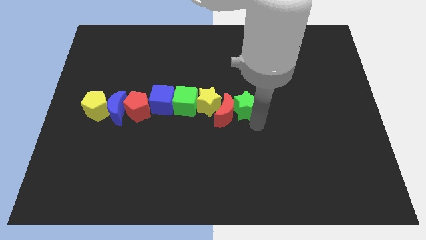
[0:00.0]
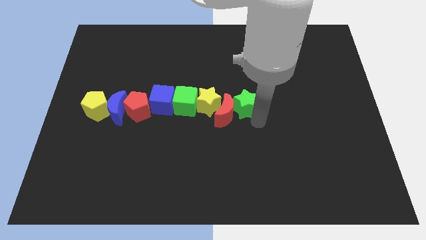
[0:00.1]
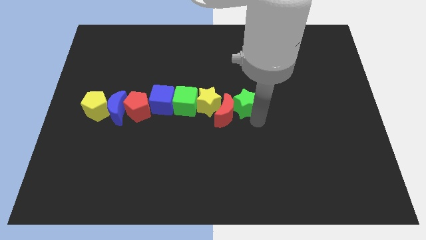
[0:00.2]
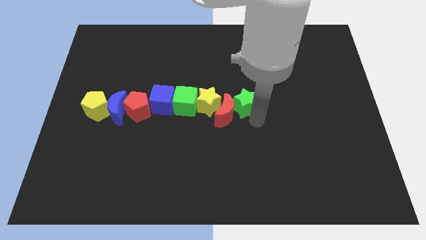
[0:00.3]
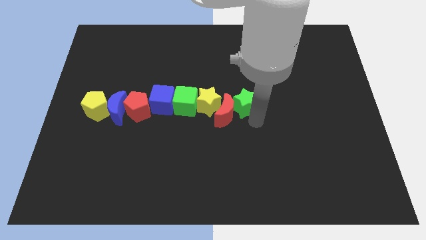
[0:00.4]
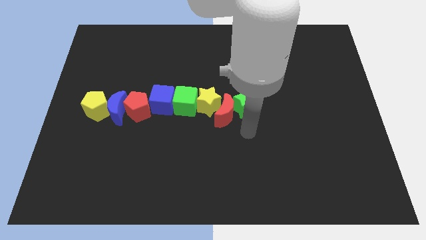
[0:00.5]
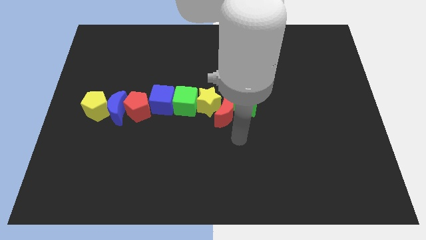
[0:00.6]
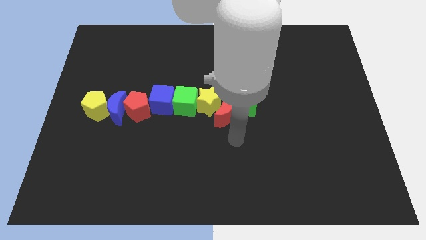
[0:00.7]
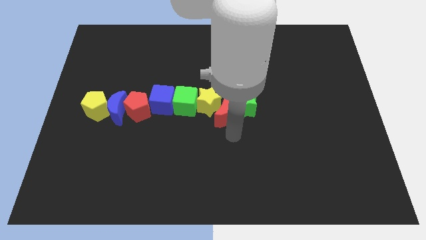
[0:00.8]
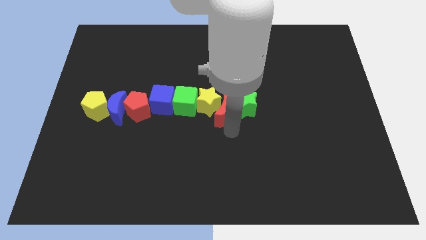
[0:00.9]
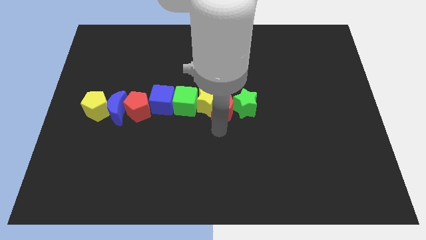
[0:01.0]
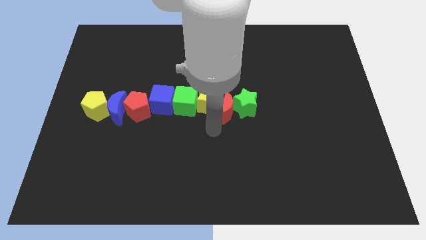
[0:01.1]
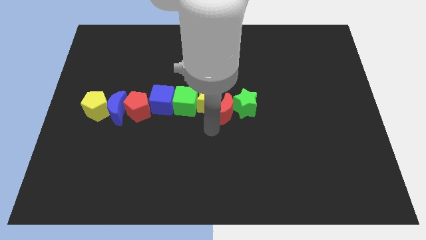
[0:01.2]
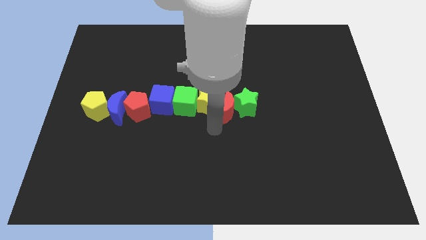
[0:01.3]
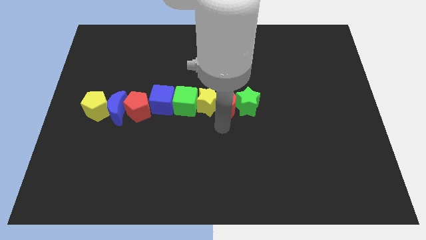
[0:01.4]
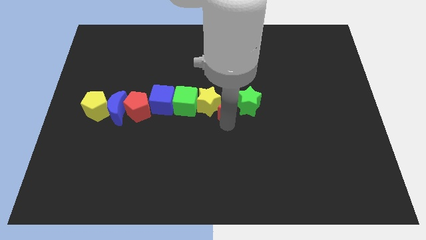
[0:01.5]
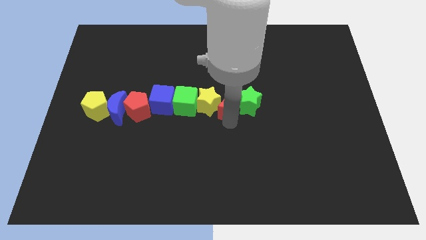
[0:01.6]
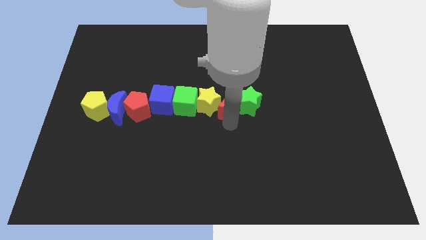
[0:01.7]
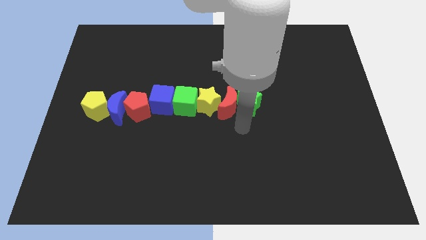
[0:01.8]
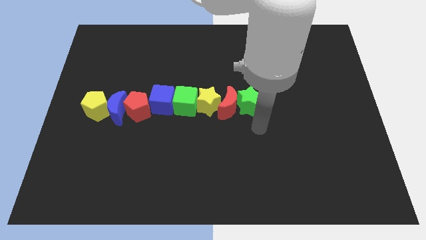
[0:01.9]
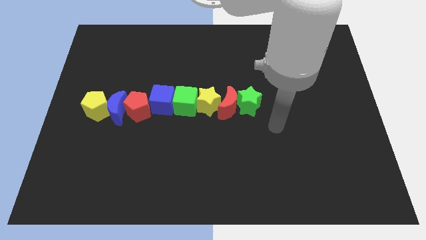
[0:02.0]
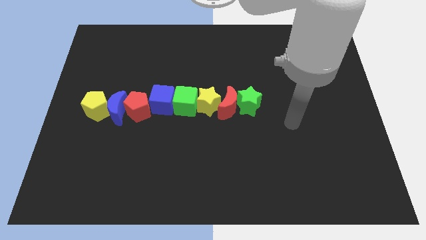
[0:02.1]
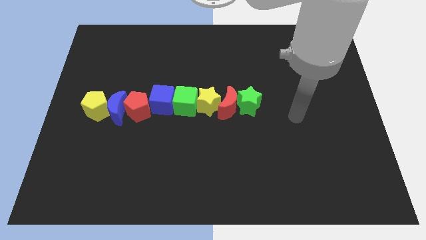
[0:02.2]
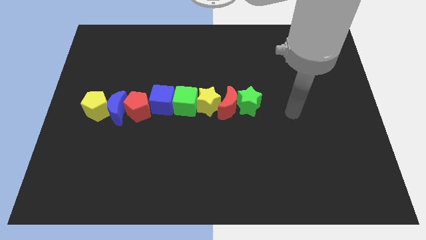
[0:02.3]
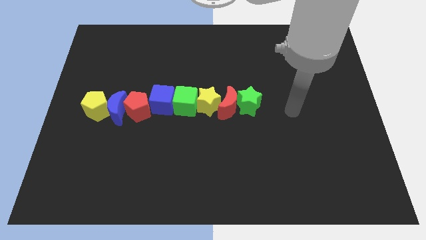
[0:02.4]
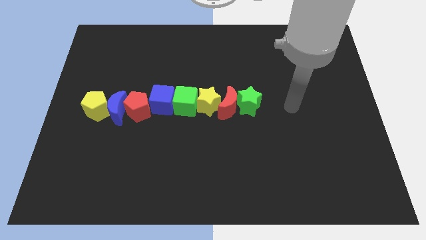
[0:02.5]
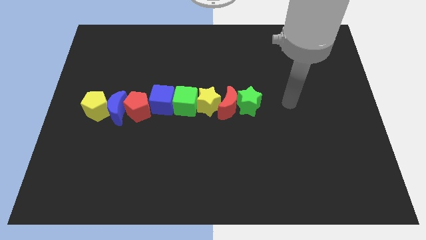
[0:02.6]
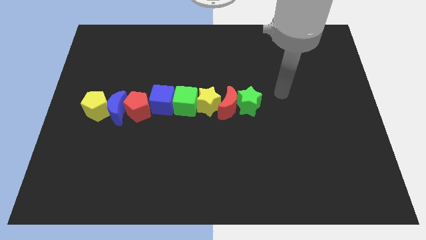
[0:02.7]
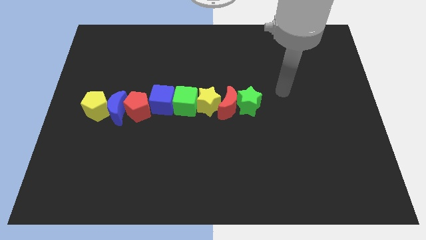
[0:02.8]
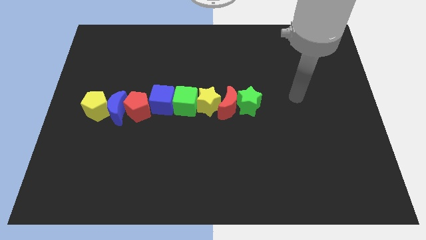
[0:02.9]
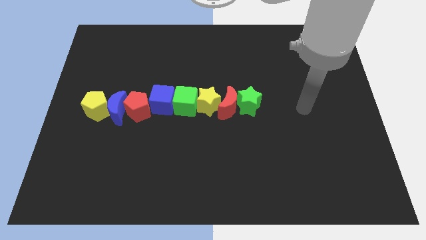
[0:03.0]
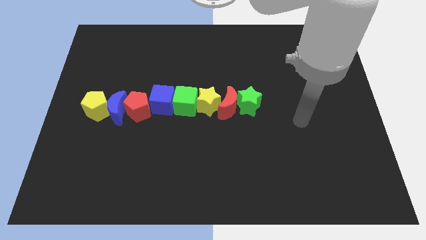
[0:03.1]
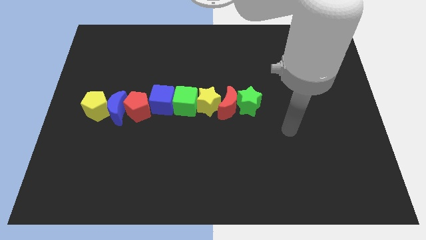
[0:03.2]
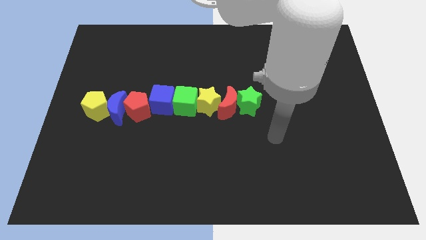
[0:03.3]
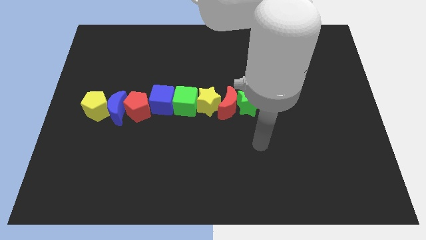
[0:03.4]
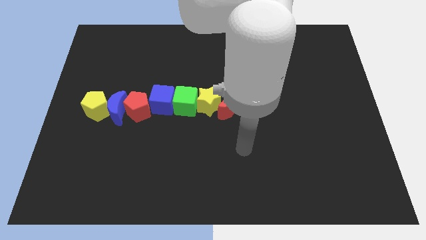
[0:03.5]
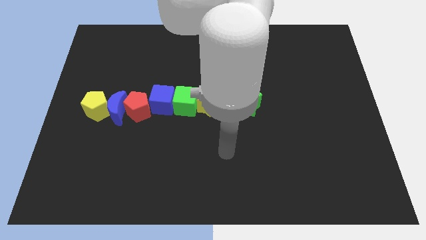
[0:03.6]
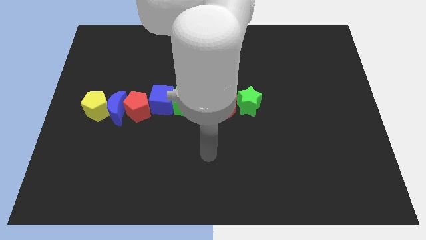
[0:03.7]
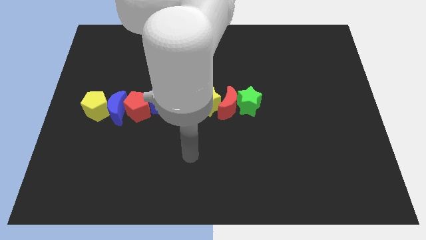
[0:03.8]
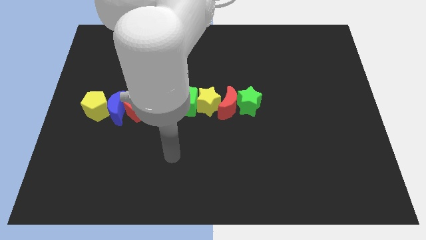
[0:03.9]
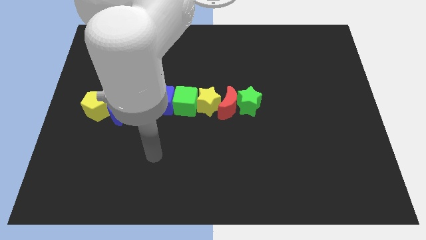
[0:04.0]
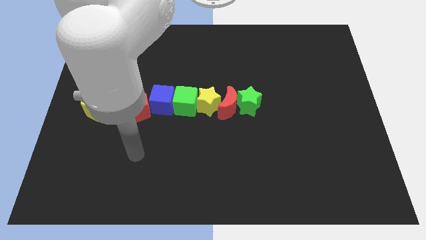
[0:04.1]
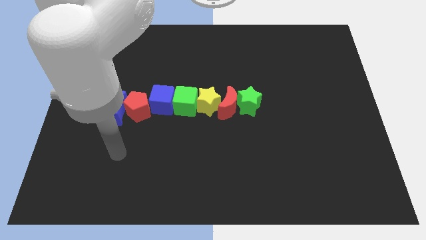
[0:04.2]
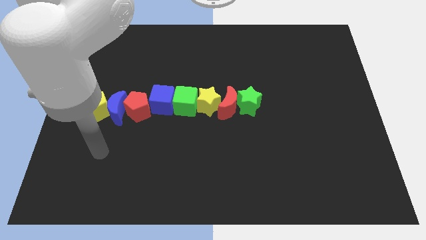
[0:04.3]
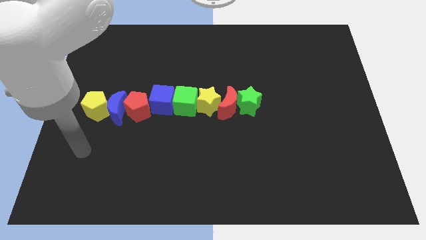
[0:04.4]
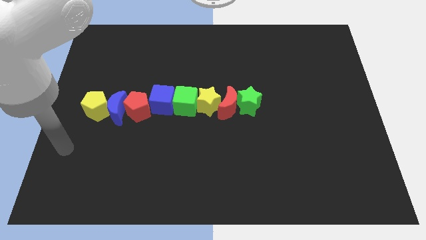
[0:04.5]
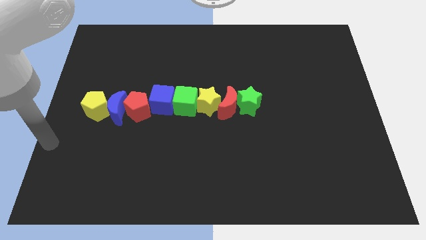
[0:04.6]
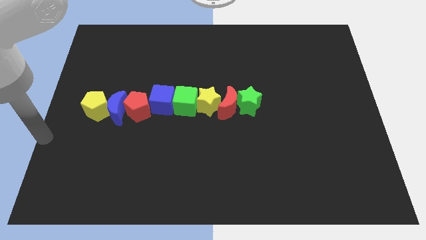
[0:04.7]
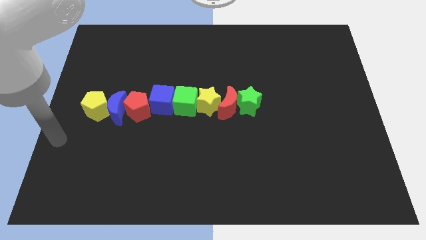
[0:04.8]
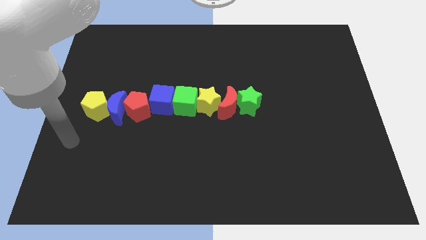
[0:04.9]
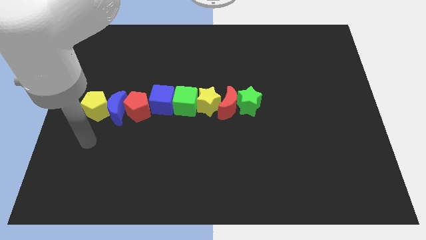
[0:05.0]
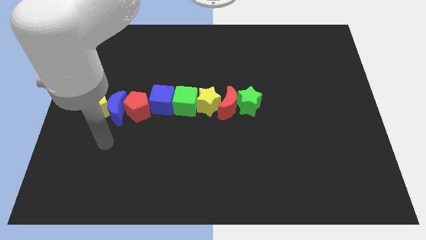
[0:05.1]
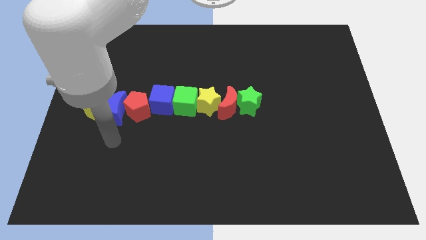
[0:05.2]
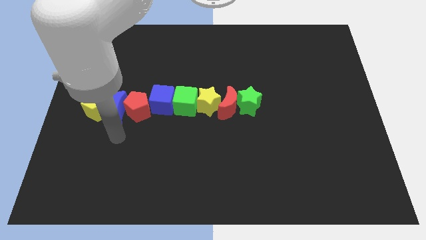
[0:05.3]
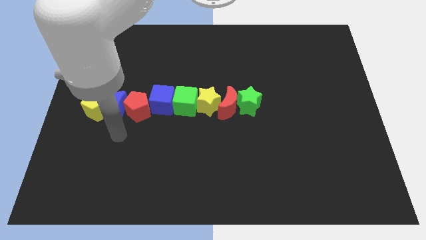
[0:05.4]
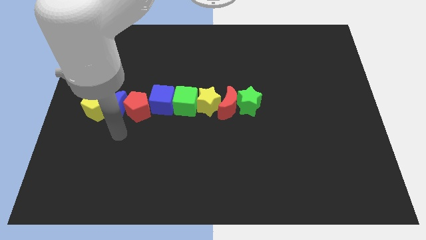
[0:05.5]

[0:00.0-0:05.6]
point your hand below blue crescent

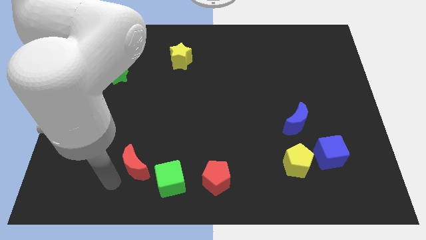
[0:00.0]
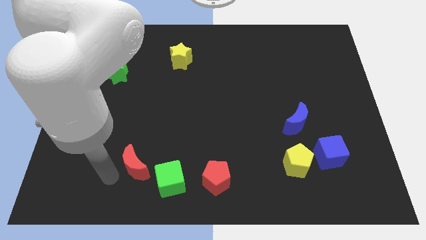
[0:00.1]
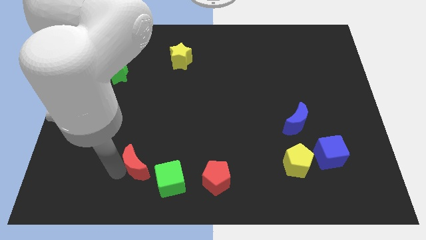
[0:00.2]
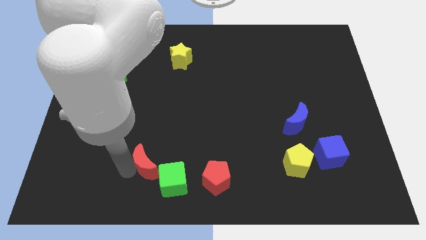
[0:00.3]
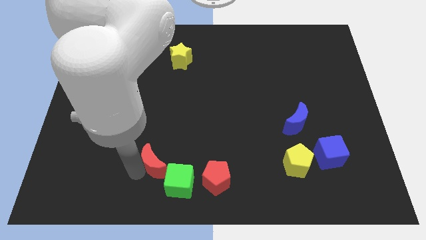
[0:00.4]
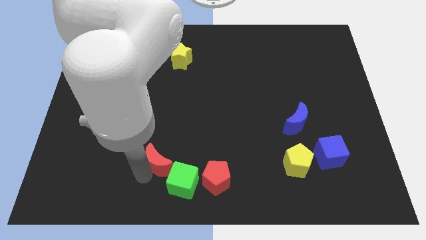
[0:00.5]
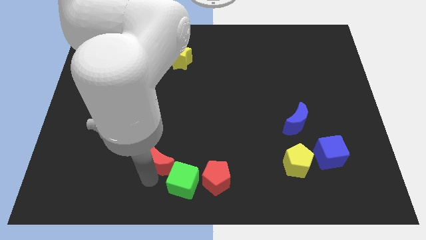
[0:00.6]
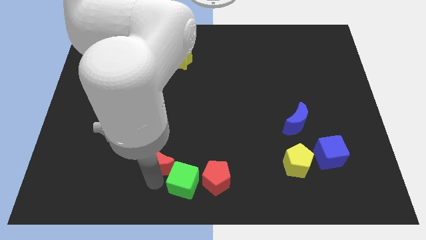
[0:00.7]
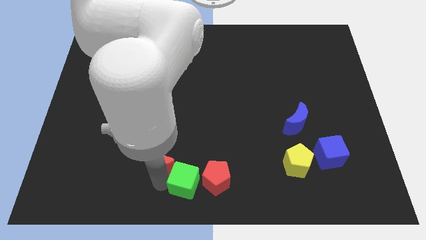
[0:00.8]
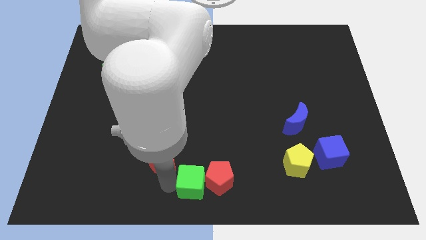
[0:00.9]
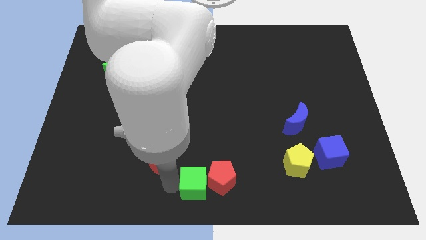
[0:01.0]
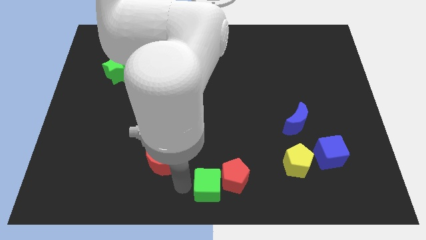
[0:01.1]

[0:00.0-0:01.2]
push the red moon into green cube

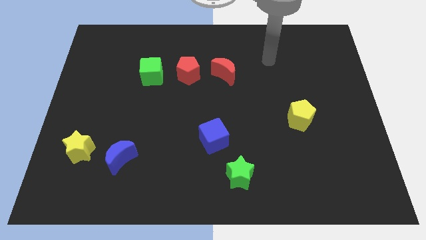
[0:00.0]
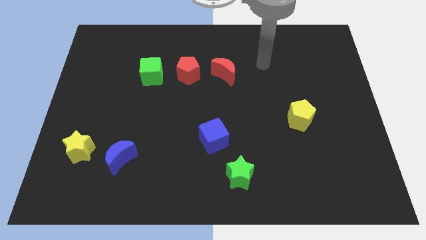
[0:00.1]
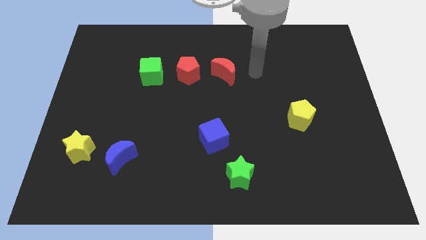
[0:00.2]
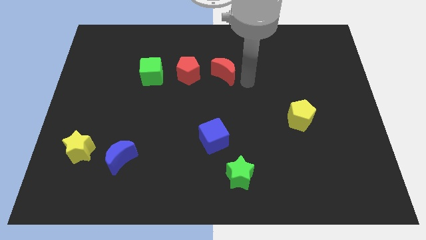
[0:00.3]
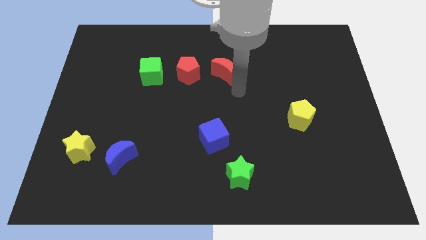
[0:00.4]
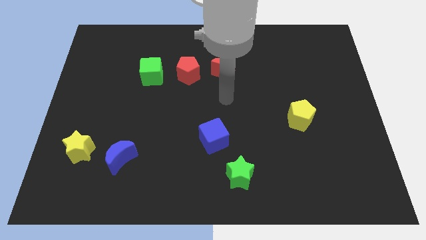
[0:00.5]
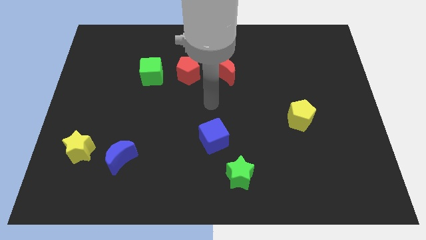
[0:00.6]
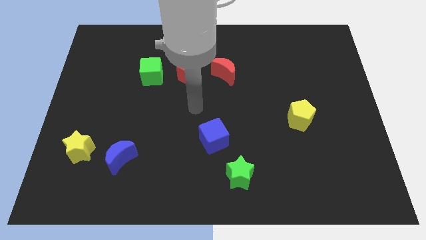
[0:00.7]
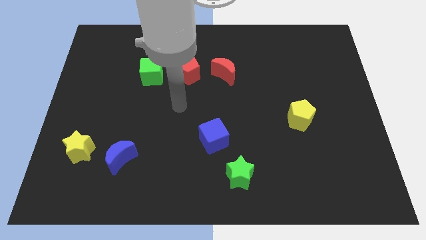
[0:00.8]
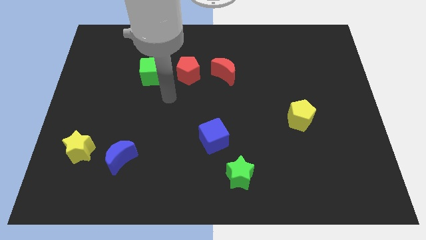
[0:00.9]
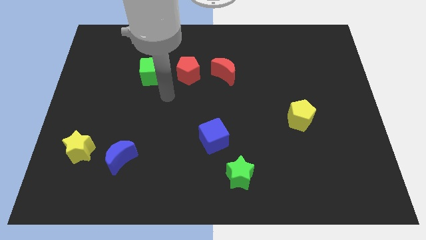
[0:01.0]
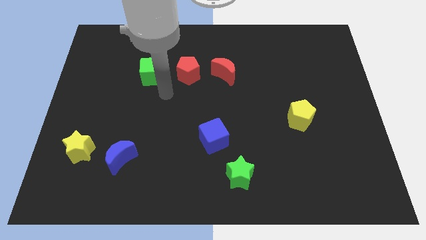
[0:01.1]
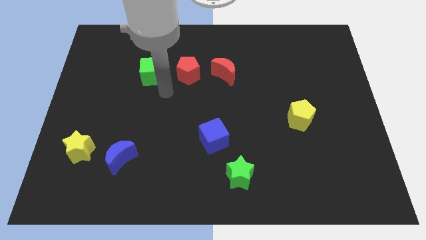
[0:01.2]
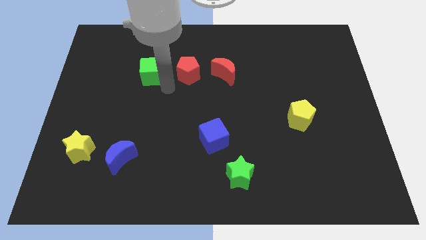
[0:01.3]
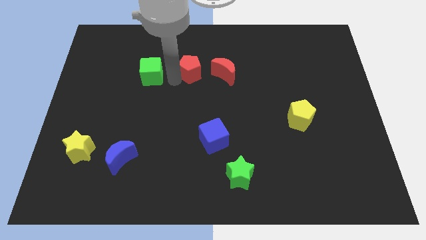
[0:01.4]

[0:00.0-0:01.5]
point the arm at the bottom right of the green cube

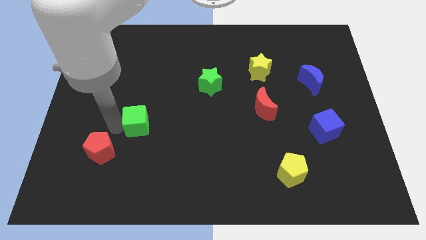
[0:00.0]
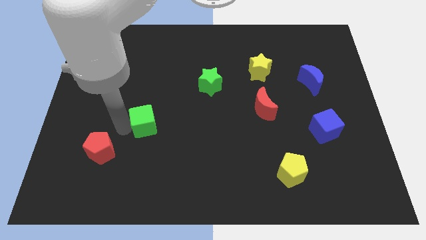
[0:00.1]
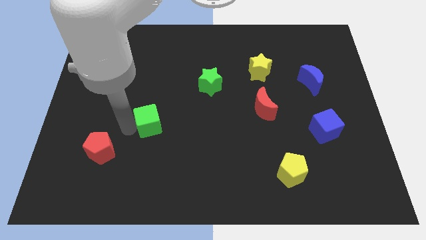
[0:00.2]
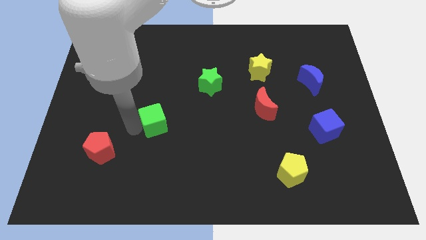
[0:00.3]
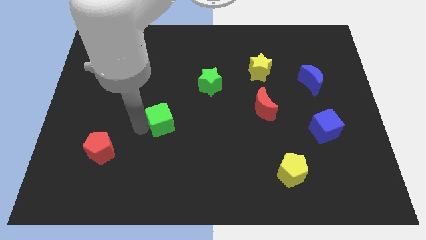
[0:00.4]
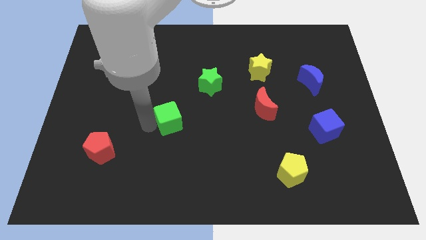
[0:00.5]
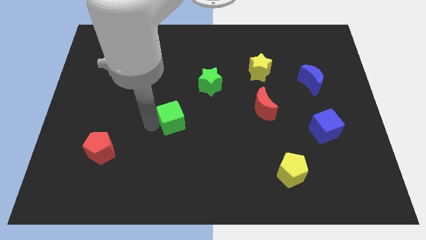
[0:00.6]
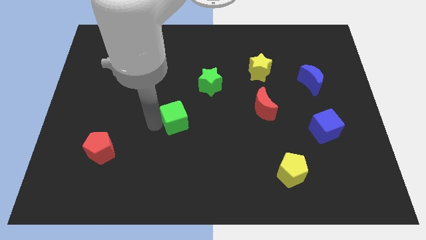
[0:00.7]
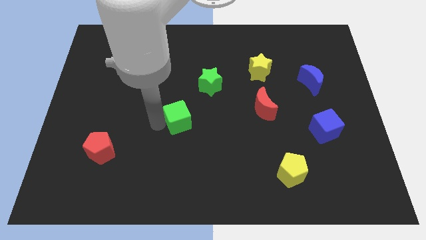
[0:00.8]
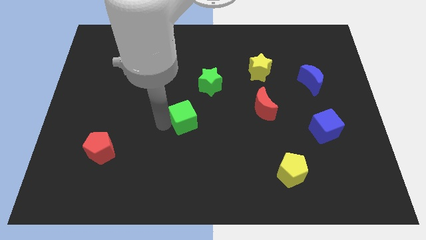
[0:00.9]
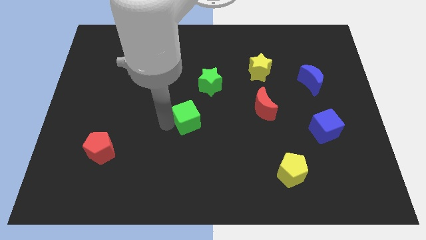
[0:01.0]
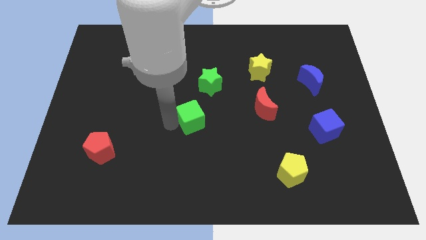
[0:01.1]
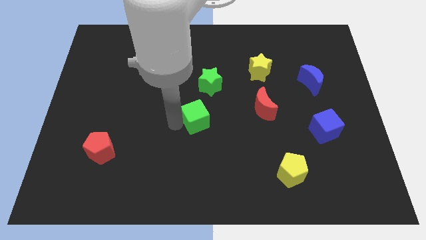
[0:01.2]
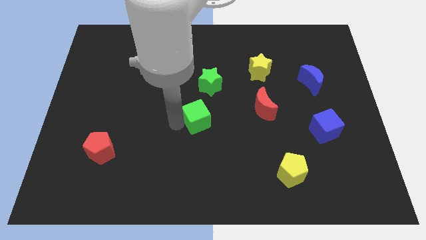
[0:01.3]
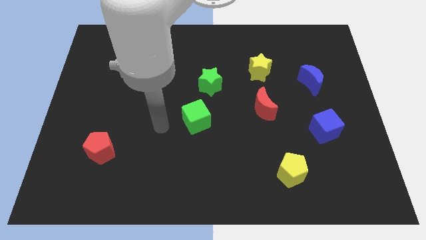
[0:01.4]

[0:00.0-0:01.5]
push the green cube to the right
